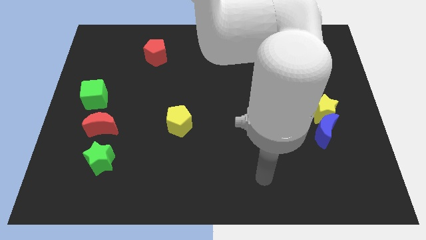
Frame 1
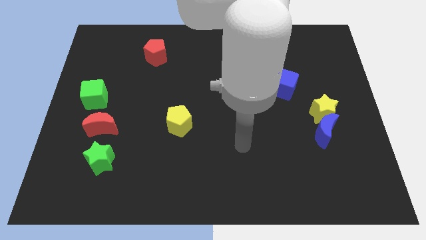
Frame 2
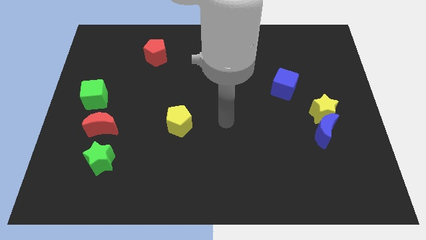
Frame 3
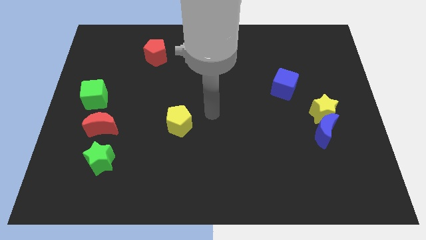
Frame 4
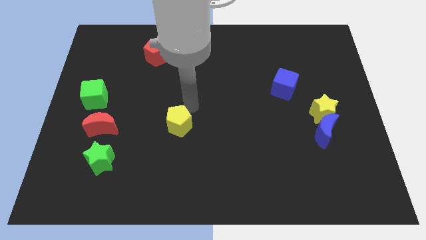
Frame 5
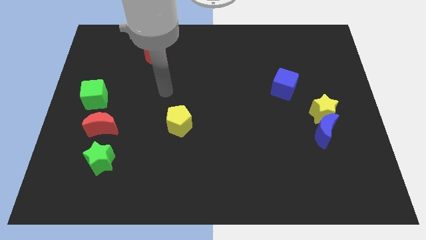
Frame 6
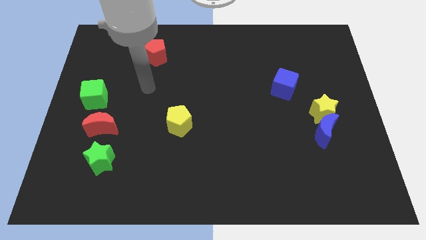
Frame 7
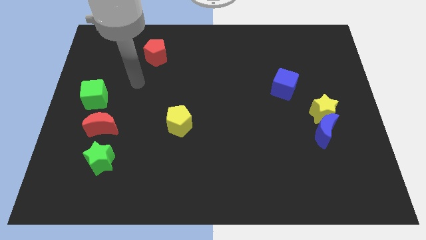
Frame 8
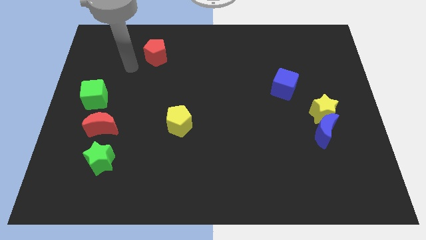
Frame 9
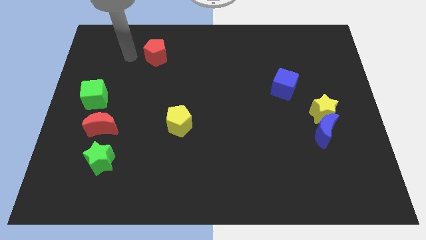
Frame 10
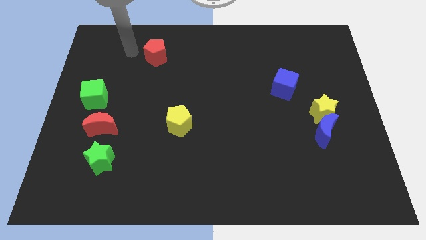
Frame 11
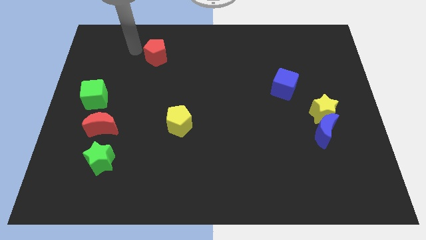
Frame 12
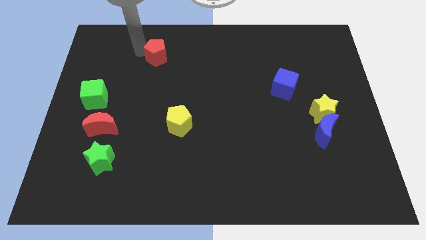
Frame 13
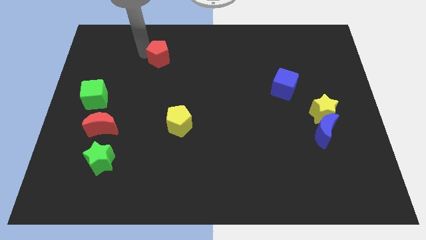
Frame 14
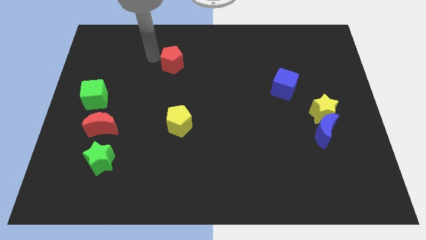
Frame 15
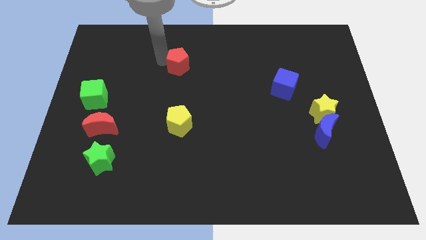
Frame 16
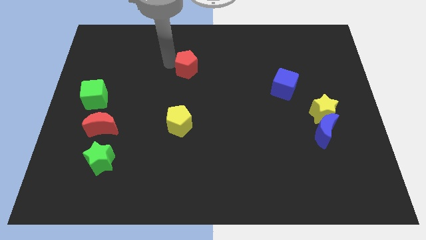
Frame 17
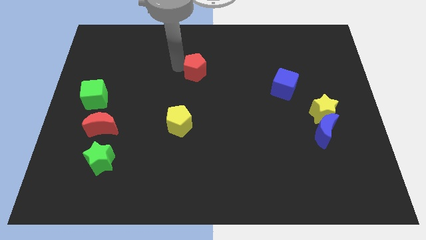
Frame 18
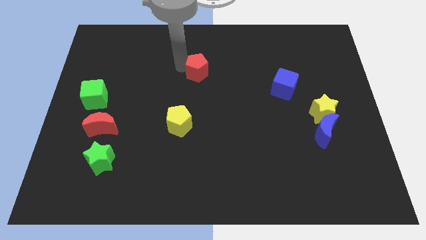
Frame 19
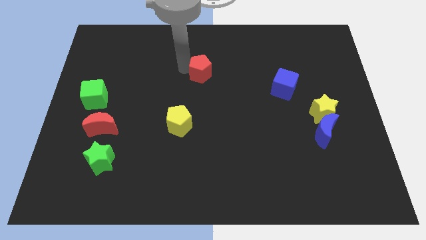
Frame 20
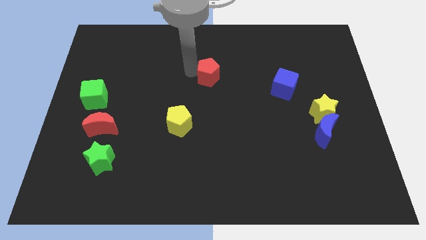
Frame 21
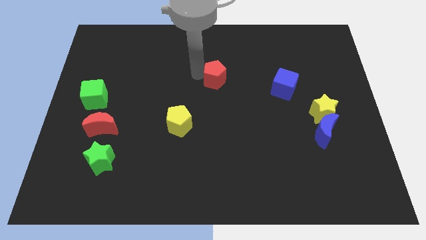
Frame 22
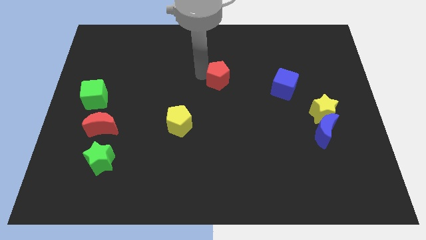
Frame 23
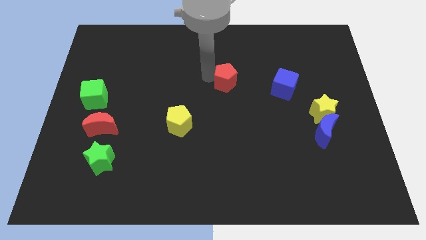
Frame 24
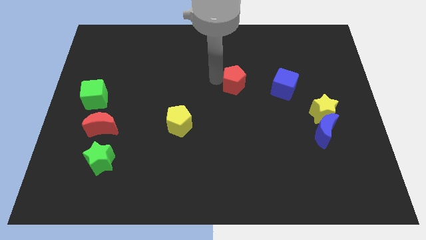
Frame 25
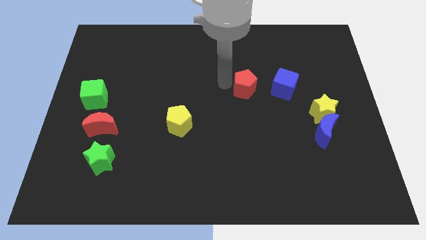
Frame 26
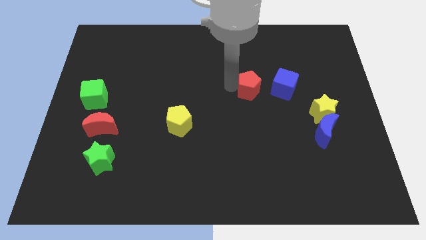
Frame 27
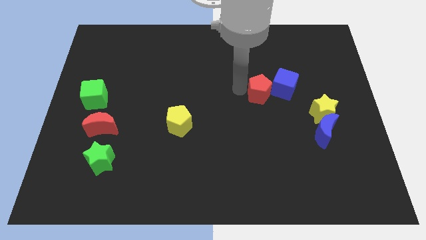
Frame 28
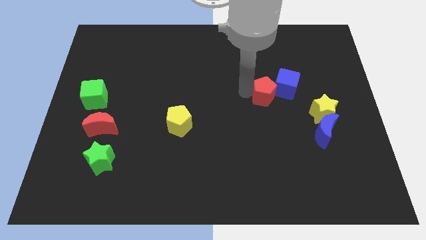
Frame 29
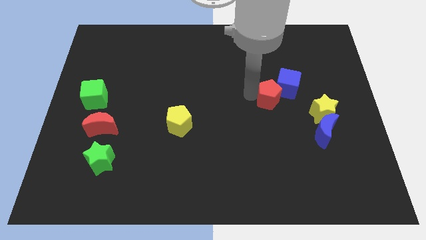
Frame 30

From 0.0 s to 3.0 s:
move the red pentagon next to the blue cube

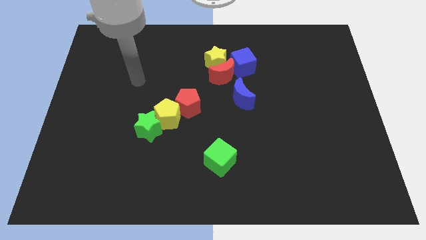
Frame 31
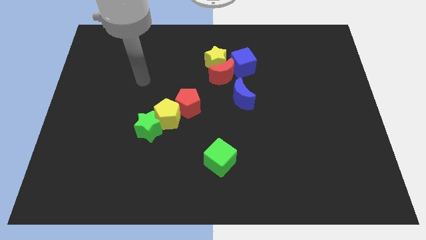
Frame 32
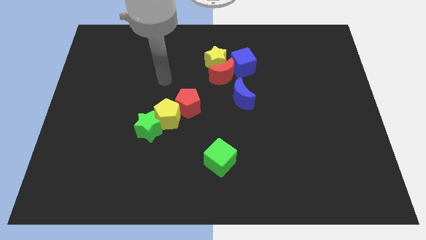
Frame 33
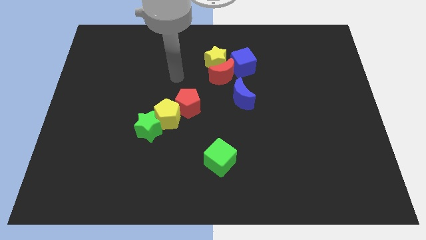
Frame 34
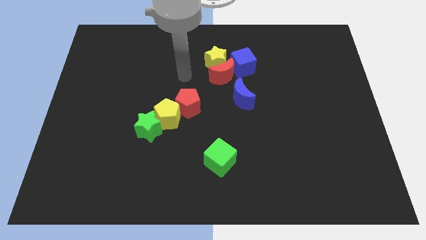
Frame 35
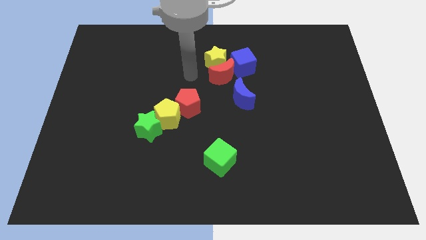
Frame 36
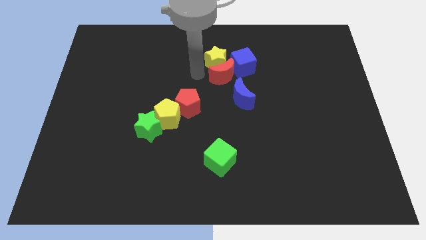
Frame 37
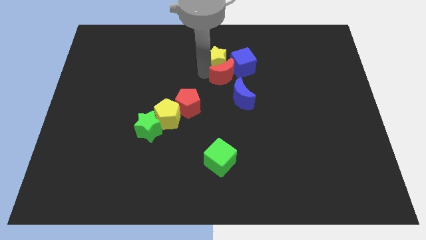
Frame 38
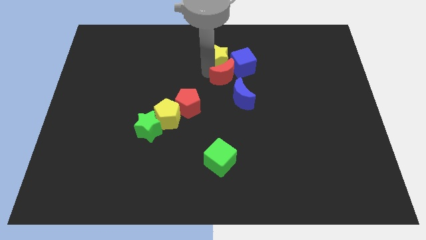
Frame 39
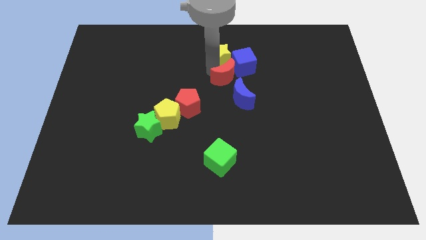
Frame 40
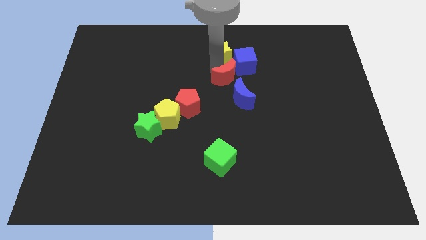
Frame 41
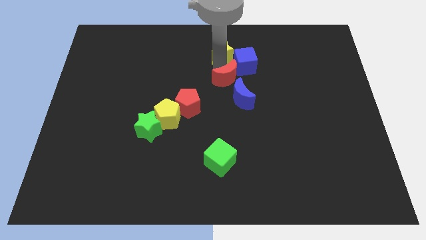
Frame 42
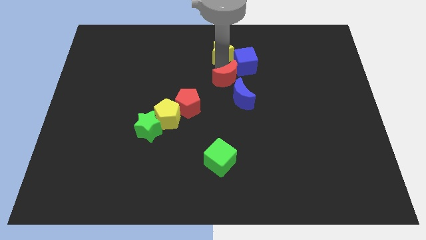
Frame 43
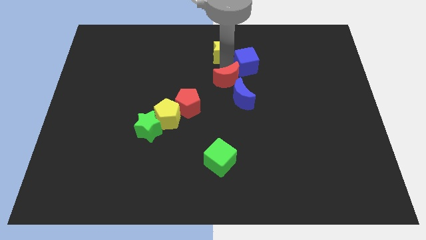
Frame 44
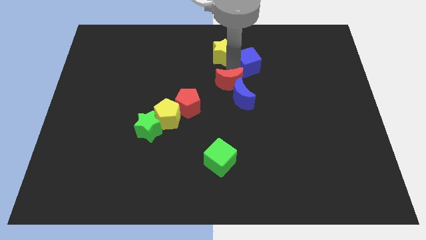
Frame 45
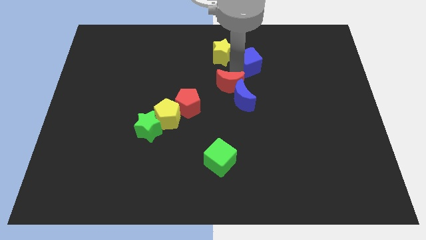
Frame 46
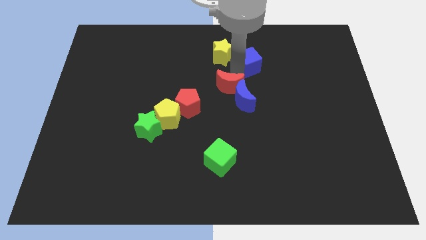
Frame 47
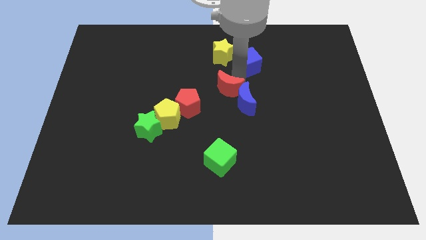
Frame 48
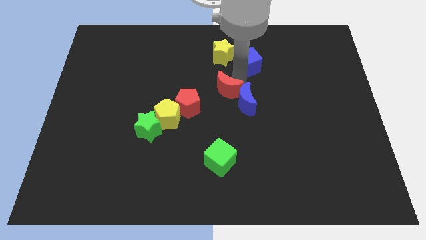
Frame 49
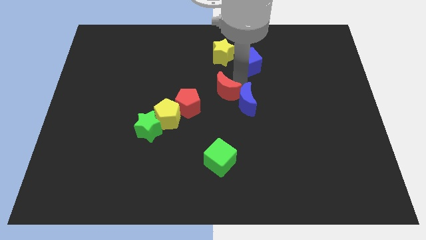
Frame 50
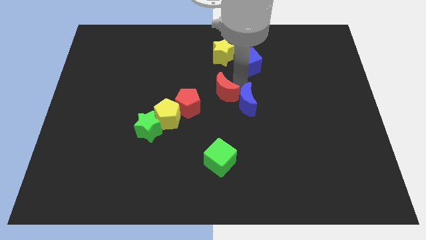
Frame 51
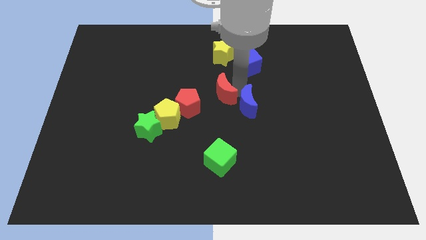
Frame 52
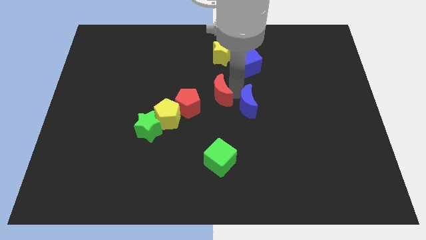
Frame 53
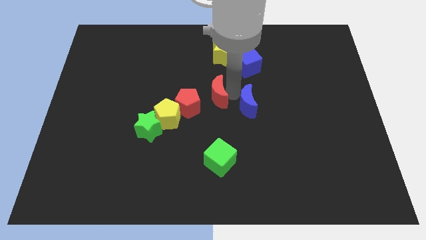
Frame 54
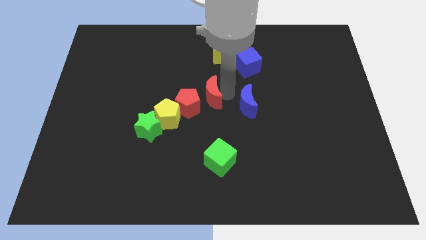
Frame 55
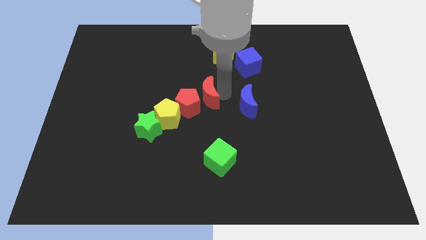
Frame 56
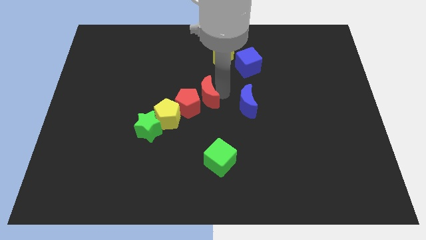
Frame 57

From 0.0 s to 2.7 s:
put the red moon close to the red pentagon

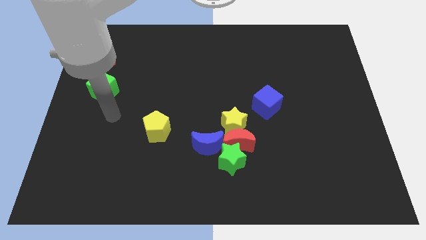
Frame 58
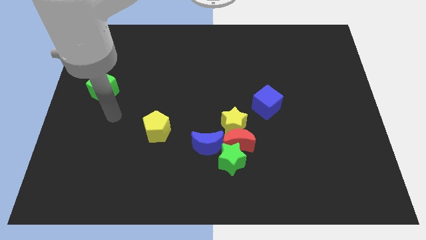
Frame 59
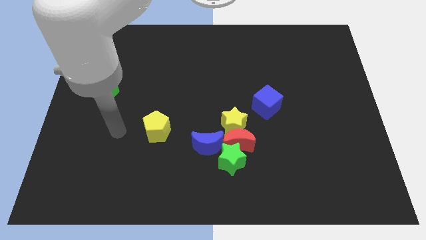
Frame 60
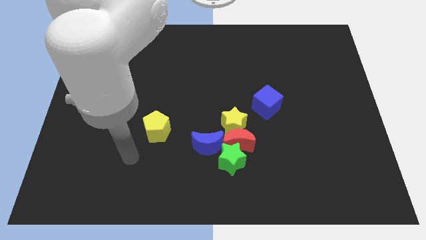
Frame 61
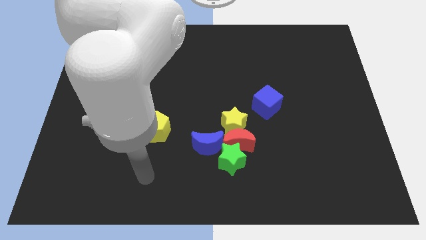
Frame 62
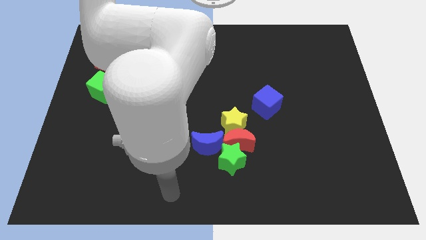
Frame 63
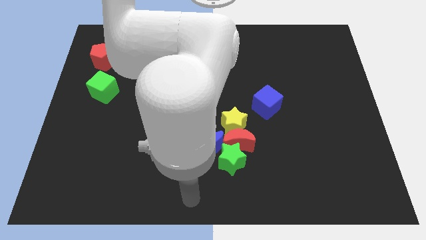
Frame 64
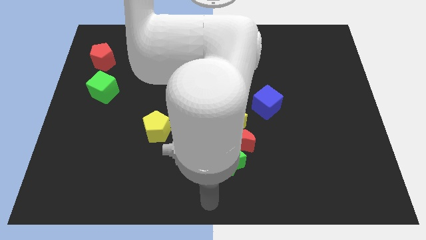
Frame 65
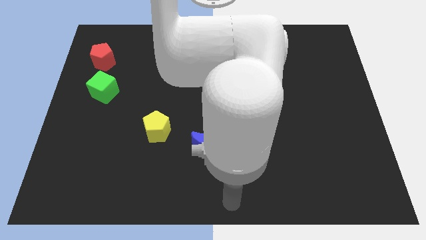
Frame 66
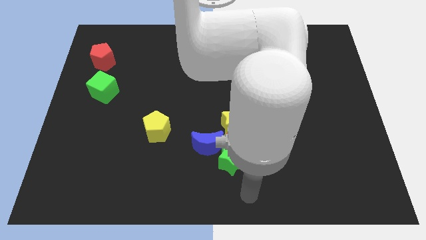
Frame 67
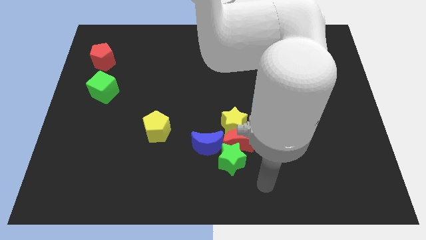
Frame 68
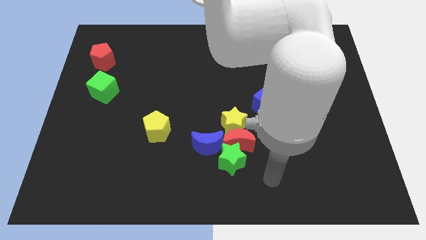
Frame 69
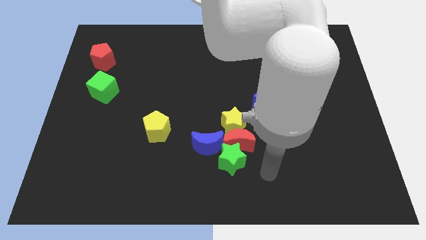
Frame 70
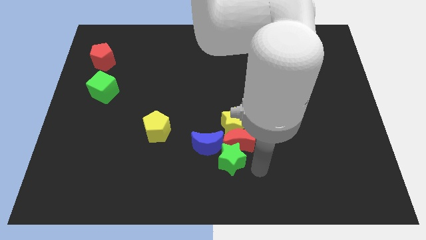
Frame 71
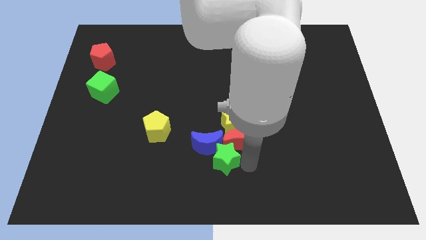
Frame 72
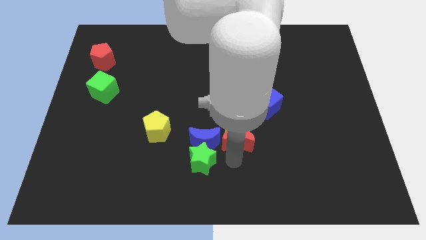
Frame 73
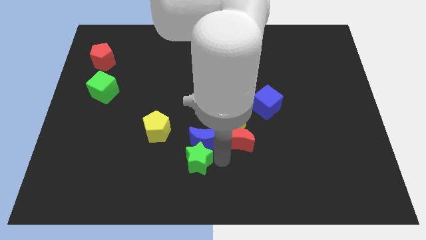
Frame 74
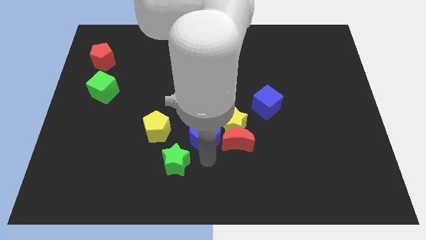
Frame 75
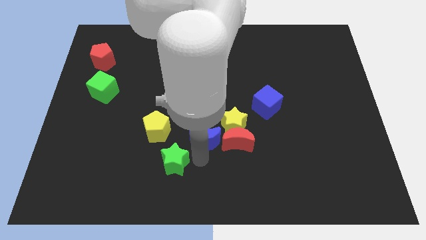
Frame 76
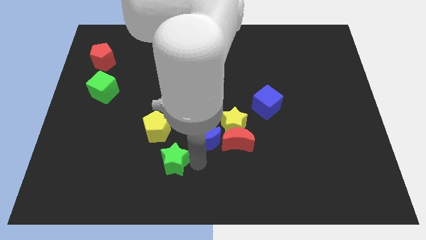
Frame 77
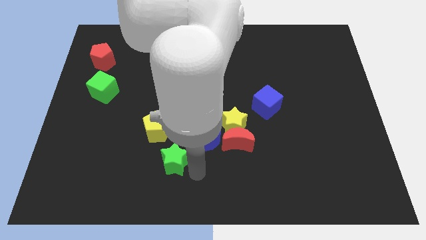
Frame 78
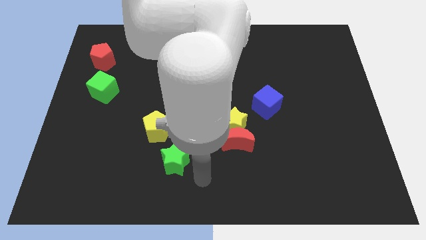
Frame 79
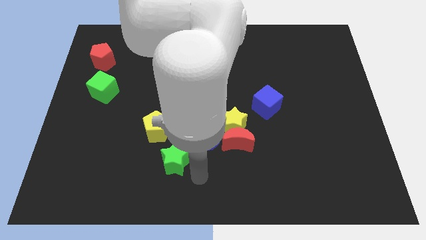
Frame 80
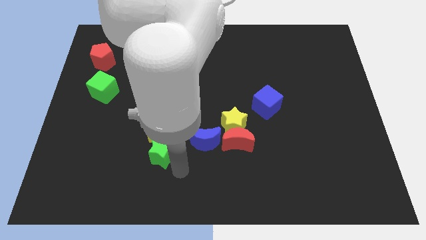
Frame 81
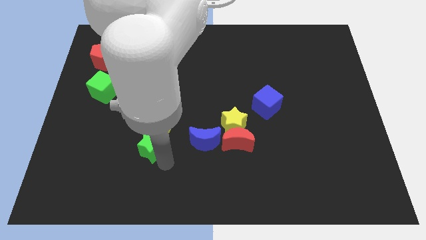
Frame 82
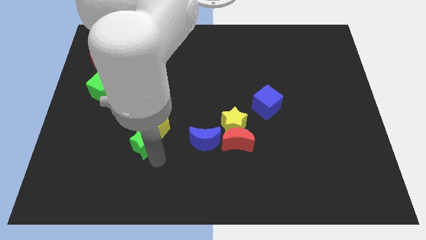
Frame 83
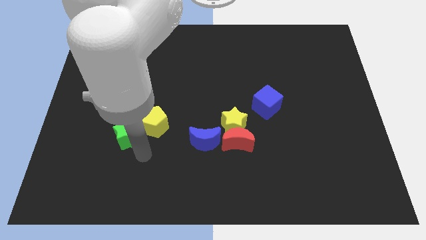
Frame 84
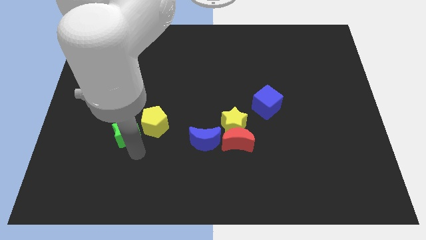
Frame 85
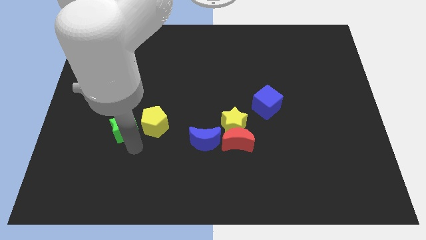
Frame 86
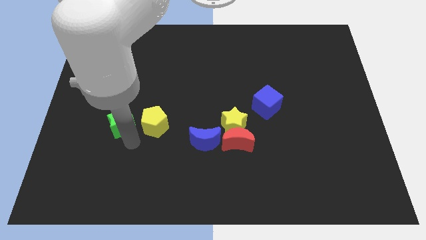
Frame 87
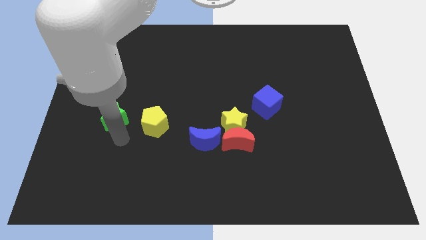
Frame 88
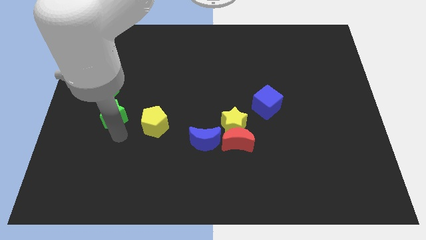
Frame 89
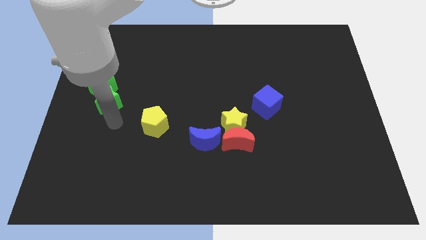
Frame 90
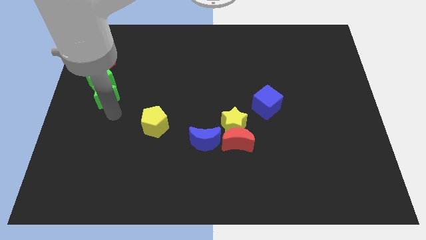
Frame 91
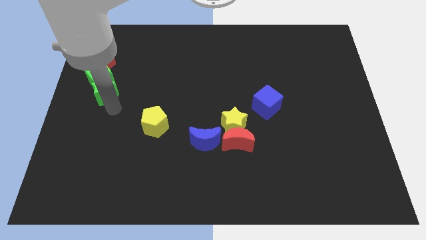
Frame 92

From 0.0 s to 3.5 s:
put the green star to the green cube
